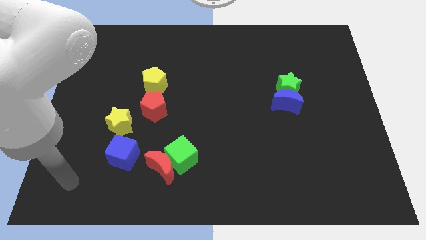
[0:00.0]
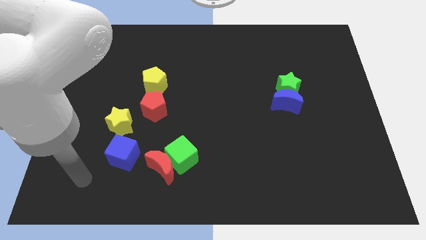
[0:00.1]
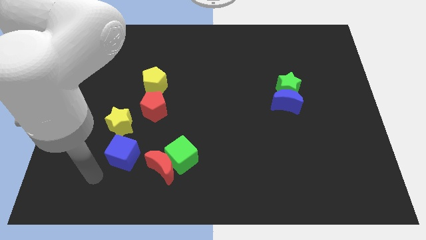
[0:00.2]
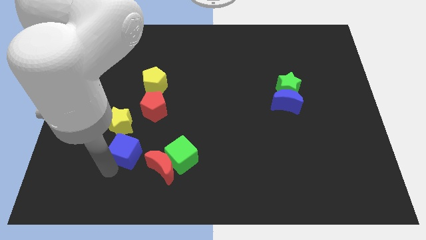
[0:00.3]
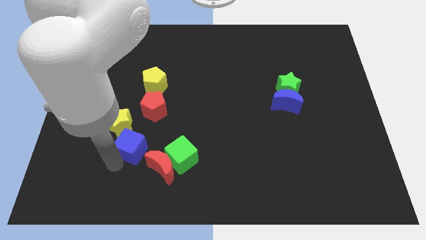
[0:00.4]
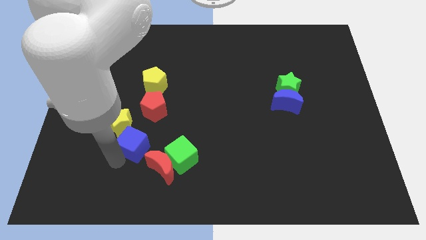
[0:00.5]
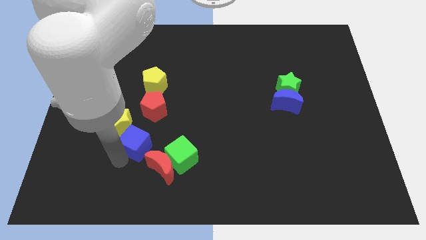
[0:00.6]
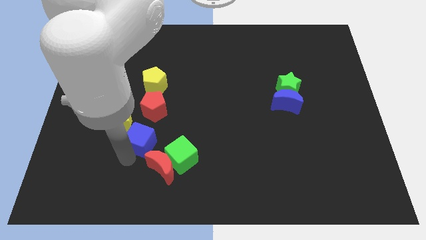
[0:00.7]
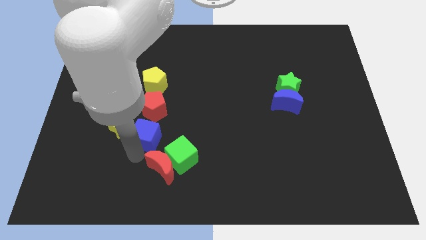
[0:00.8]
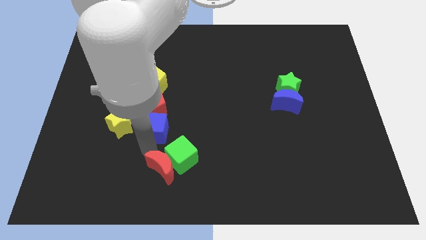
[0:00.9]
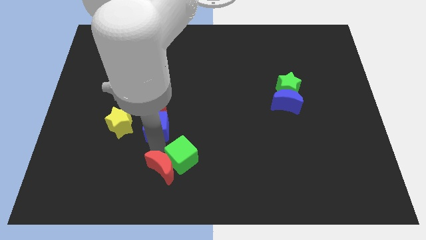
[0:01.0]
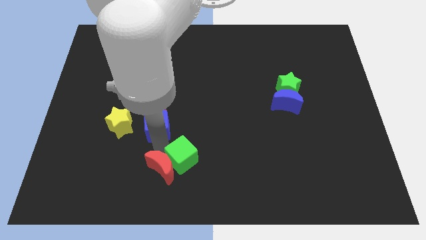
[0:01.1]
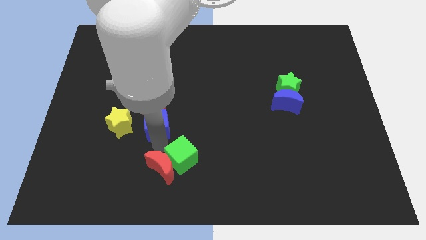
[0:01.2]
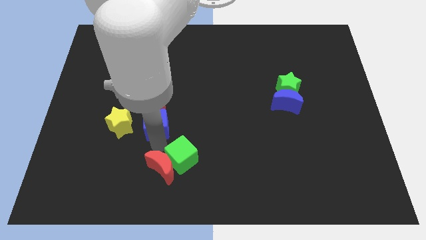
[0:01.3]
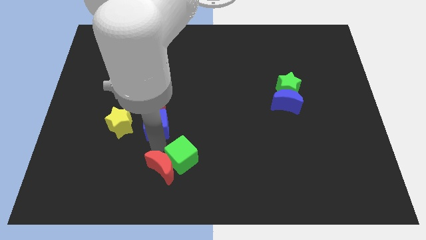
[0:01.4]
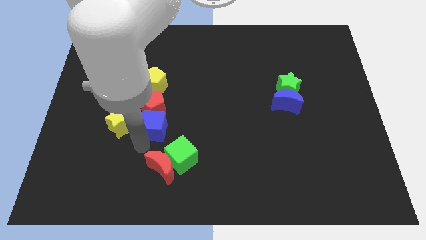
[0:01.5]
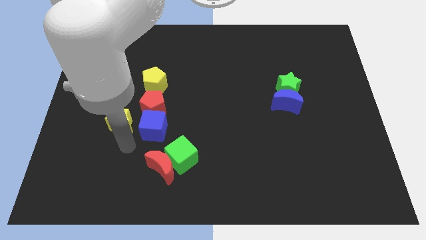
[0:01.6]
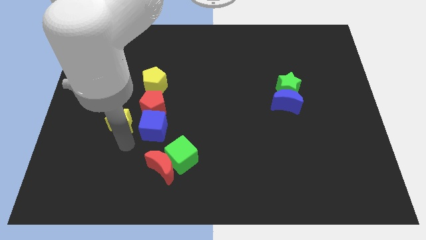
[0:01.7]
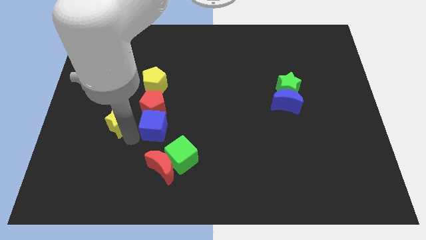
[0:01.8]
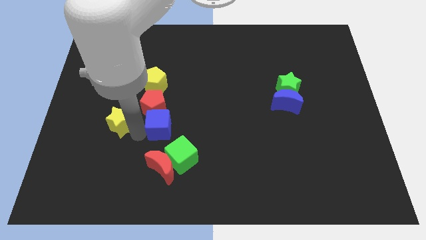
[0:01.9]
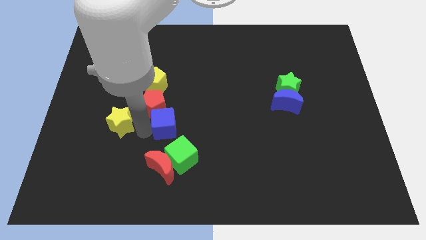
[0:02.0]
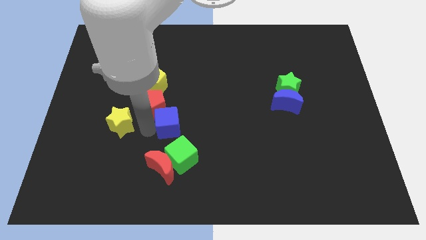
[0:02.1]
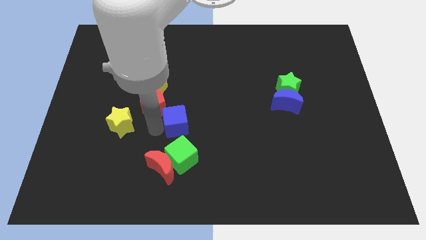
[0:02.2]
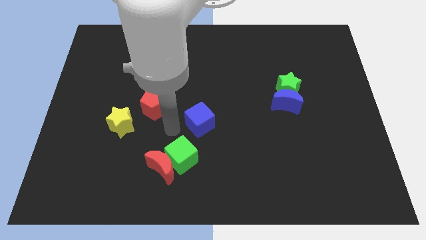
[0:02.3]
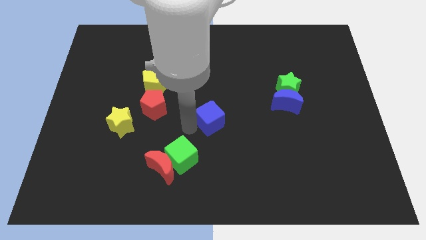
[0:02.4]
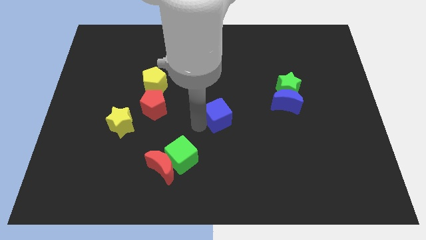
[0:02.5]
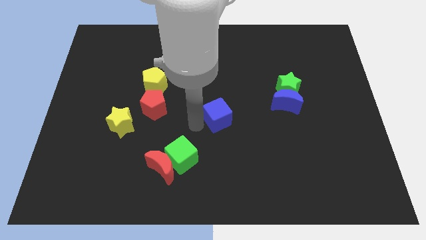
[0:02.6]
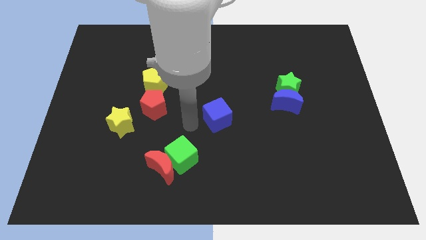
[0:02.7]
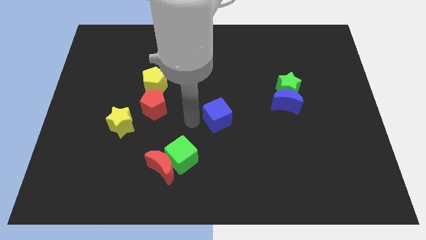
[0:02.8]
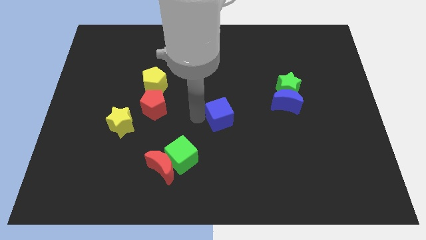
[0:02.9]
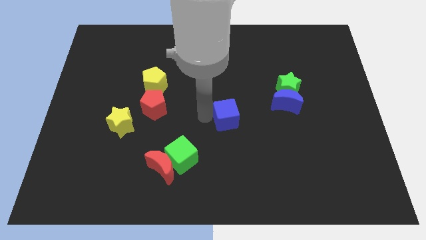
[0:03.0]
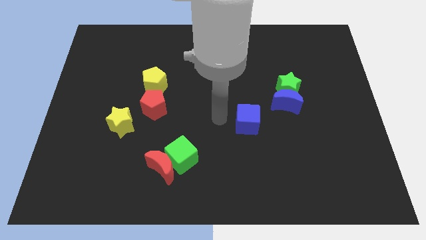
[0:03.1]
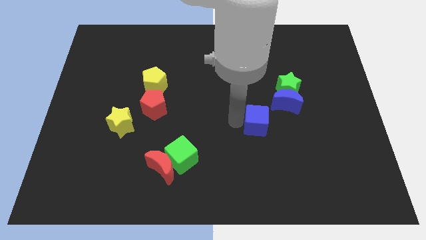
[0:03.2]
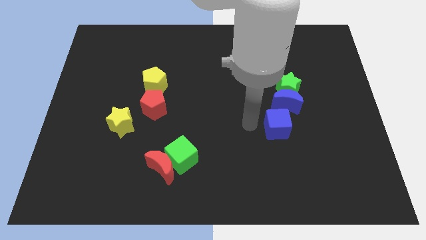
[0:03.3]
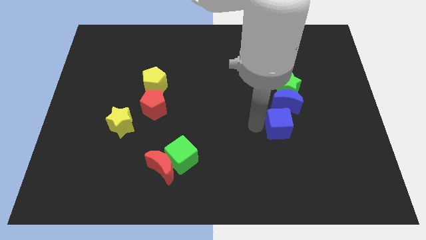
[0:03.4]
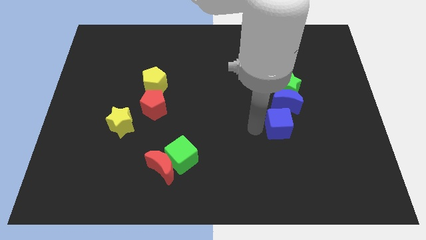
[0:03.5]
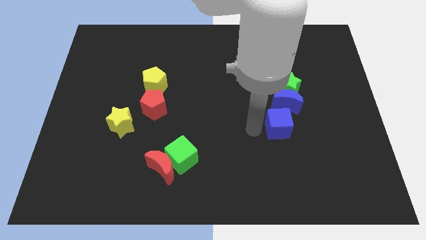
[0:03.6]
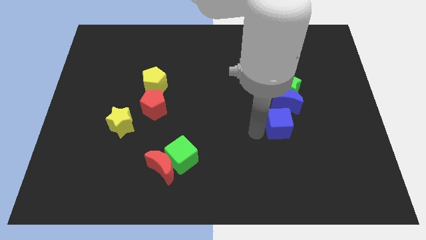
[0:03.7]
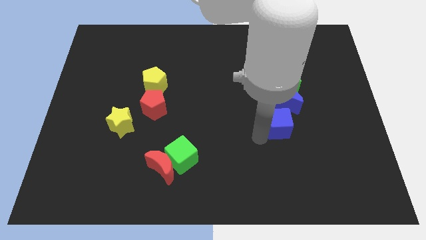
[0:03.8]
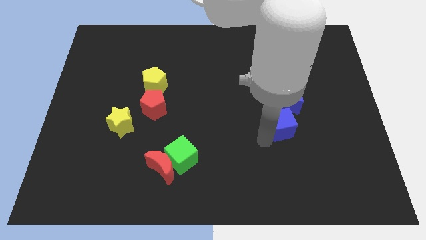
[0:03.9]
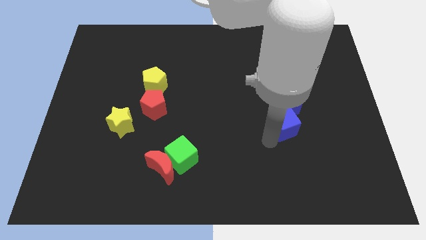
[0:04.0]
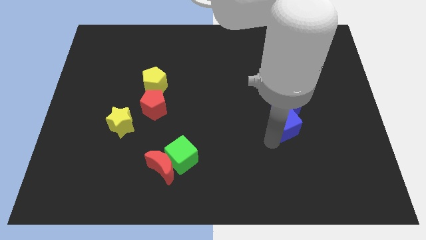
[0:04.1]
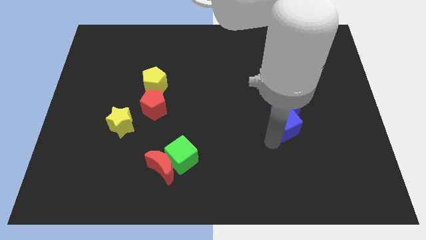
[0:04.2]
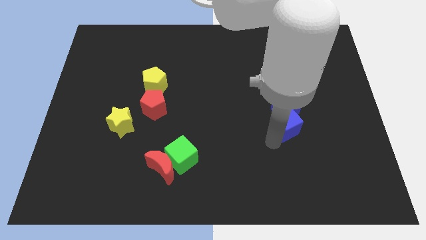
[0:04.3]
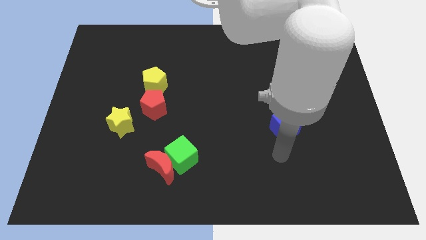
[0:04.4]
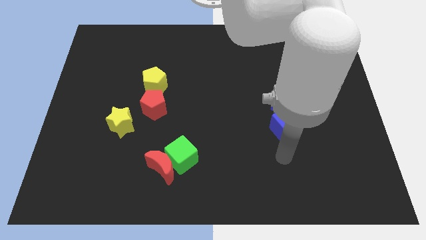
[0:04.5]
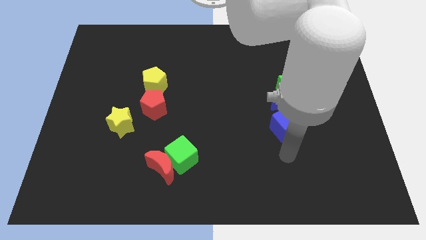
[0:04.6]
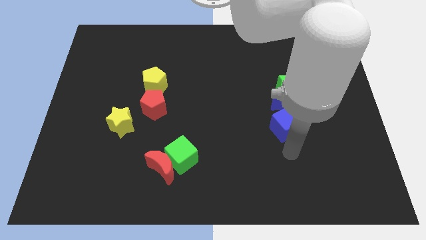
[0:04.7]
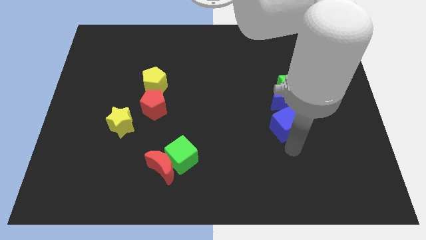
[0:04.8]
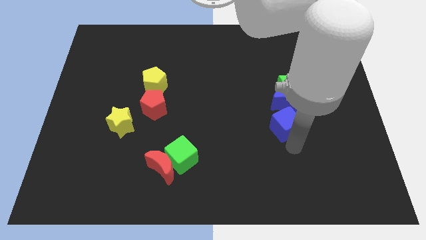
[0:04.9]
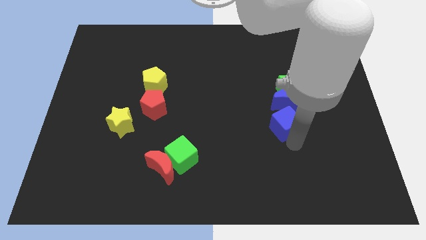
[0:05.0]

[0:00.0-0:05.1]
place the blue cube to the bottom of the blue crescent

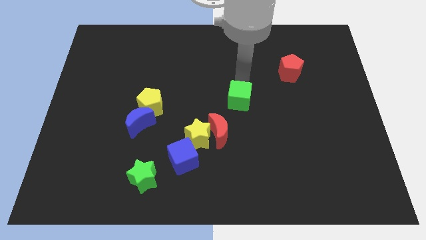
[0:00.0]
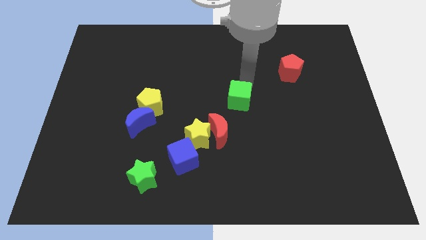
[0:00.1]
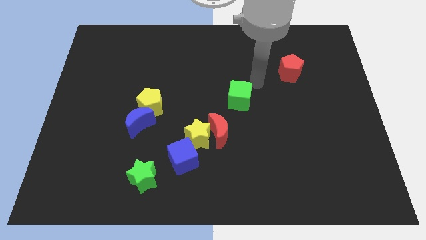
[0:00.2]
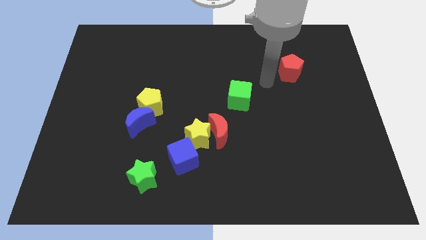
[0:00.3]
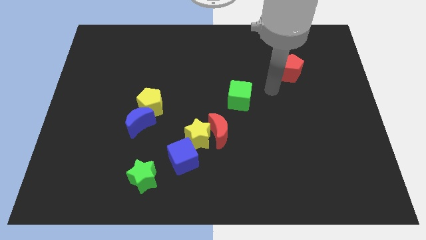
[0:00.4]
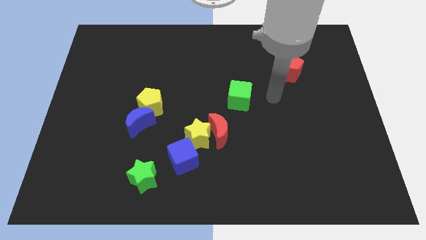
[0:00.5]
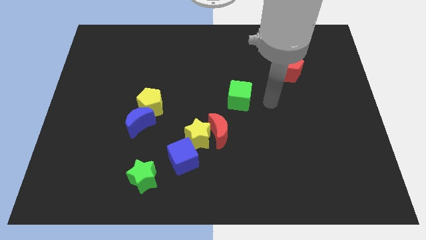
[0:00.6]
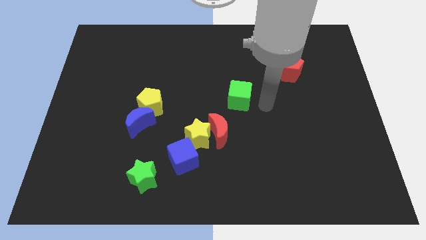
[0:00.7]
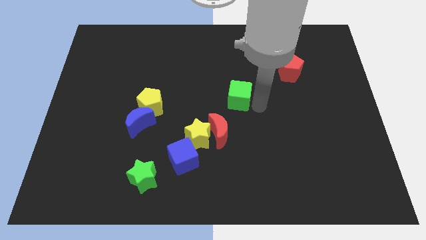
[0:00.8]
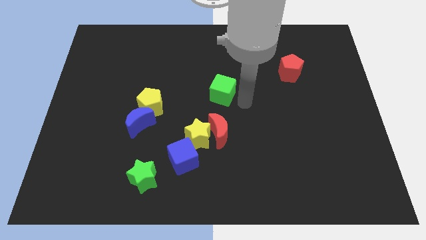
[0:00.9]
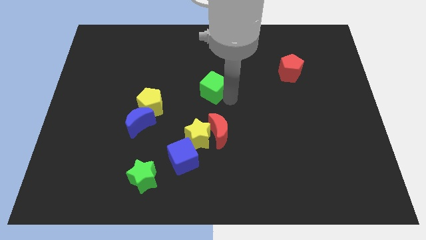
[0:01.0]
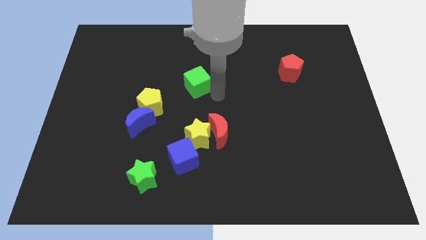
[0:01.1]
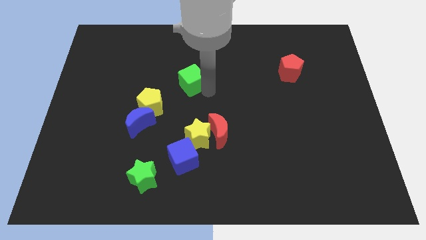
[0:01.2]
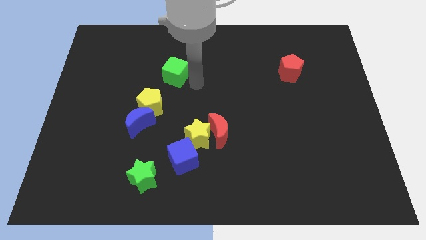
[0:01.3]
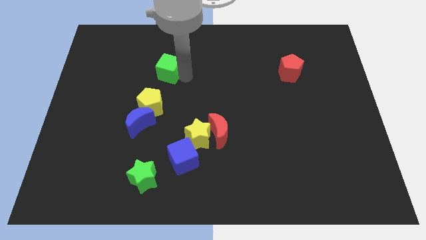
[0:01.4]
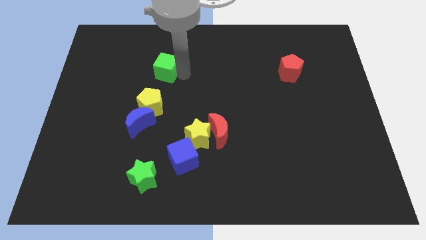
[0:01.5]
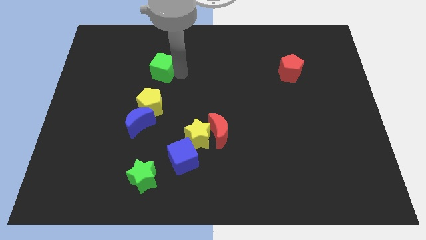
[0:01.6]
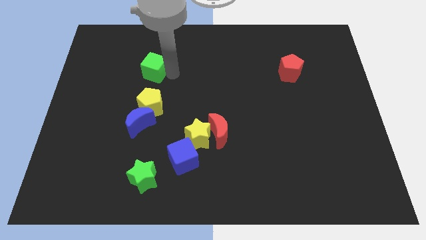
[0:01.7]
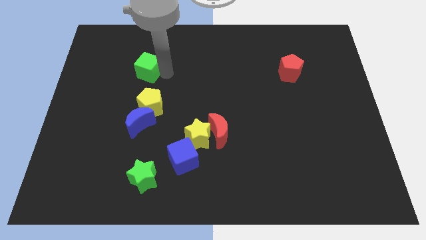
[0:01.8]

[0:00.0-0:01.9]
place the green cube vertically above the yellow pentagon

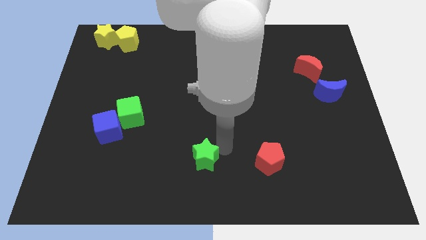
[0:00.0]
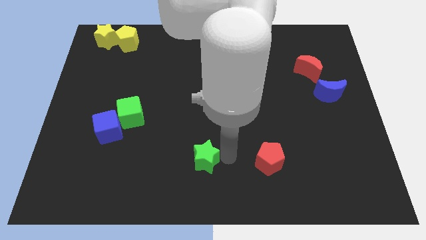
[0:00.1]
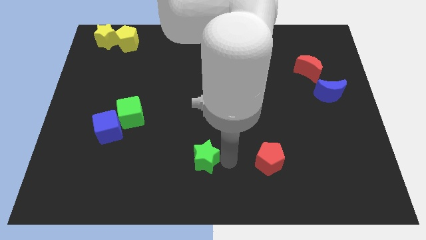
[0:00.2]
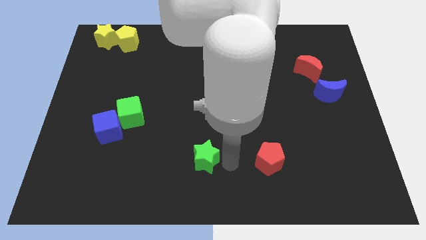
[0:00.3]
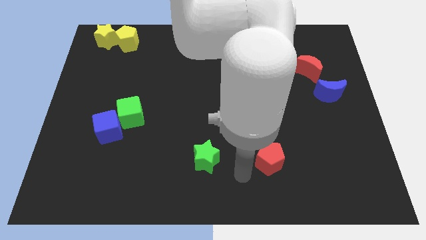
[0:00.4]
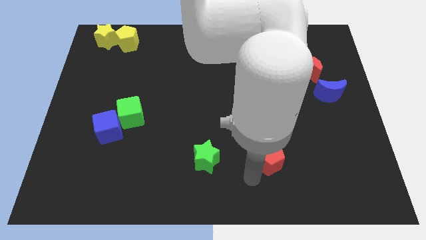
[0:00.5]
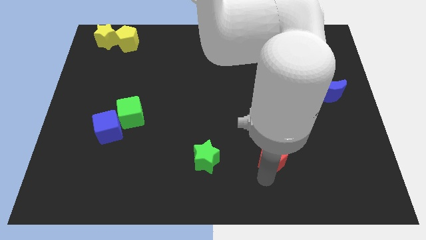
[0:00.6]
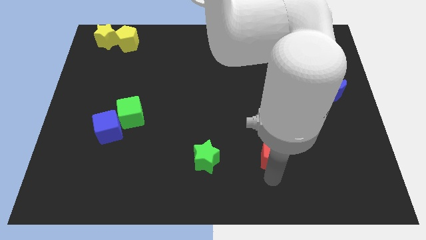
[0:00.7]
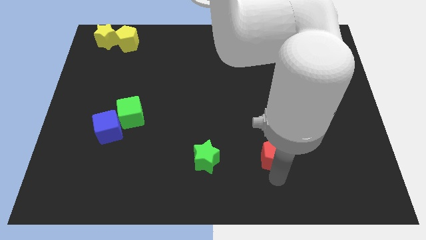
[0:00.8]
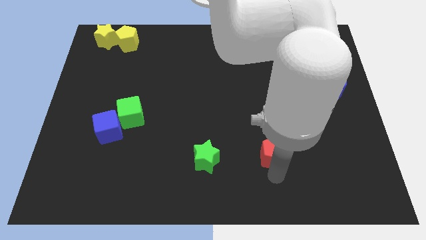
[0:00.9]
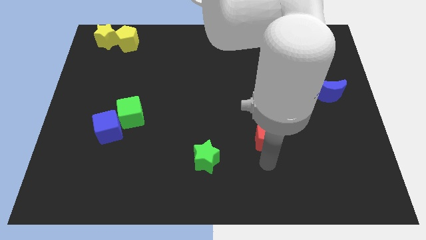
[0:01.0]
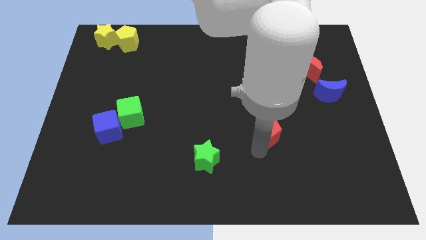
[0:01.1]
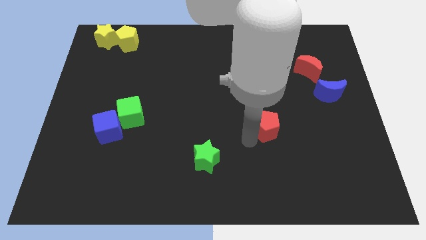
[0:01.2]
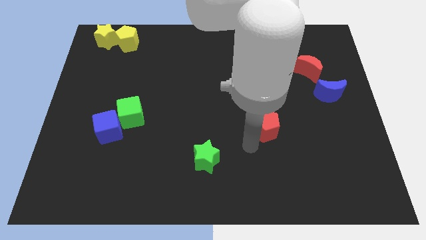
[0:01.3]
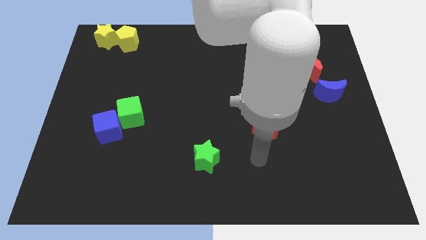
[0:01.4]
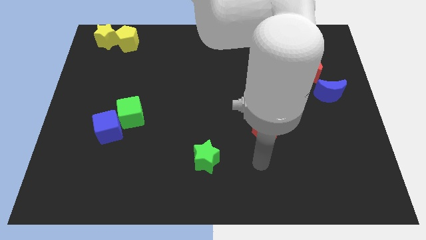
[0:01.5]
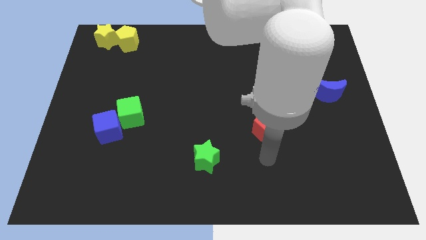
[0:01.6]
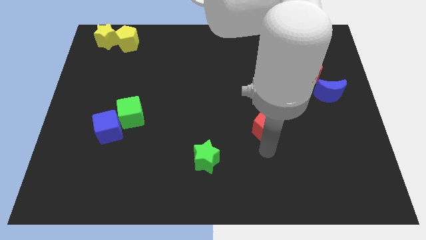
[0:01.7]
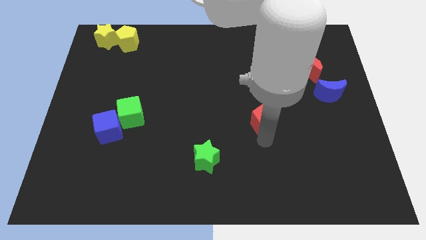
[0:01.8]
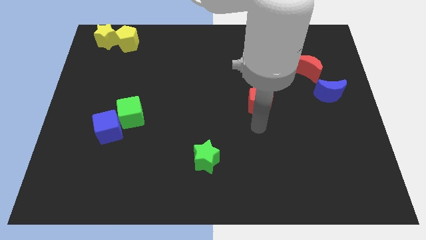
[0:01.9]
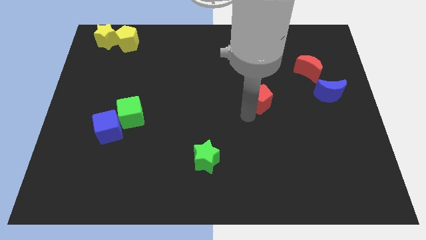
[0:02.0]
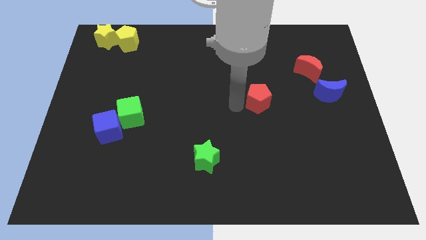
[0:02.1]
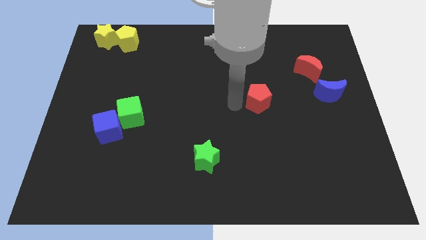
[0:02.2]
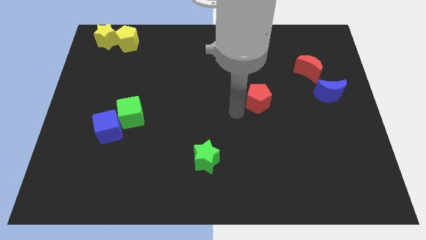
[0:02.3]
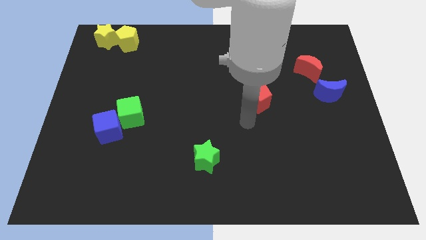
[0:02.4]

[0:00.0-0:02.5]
move the red pentagon towards the center of the board
